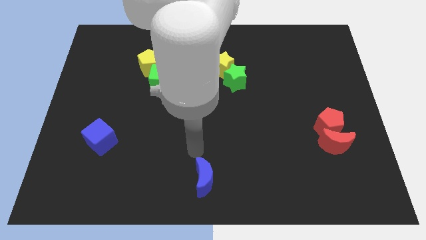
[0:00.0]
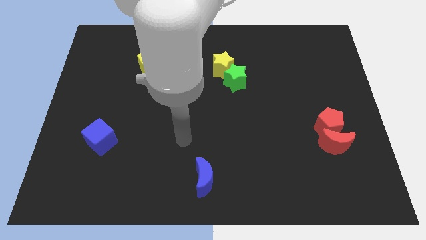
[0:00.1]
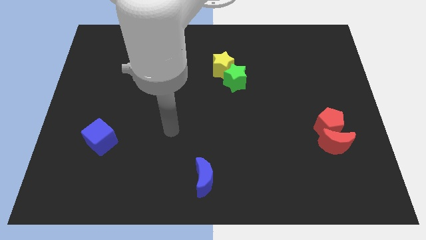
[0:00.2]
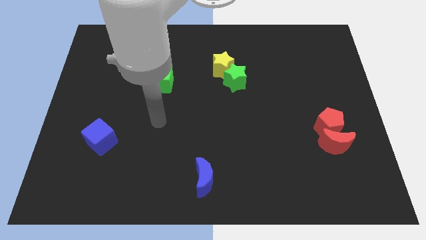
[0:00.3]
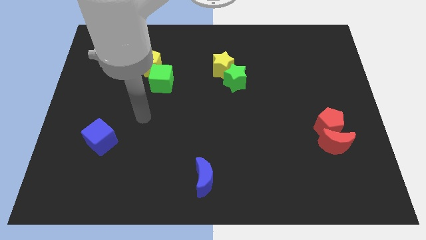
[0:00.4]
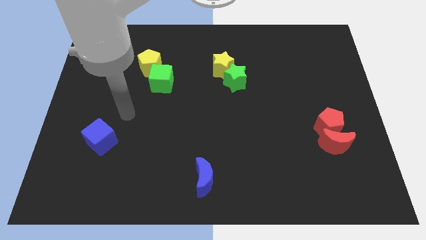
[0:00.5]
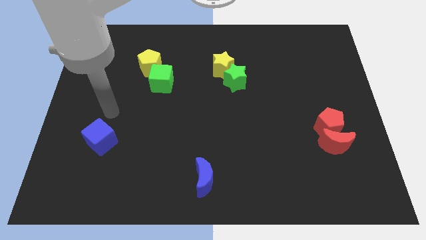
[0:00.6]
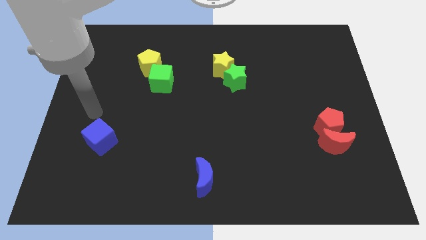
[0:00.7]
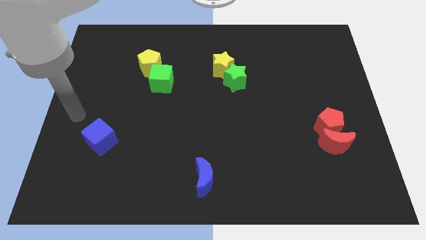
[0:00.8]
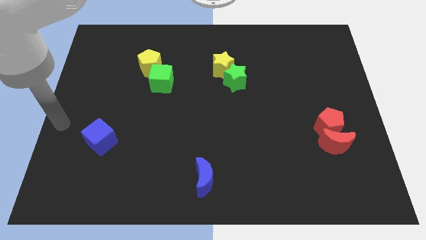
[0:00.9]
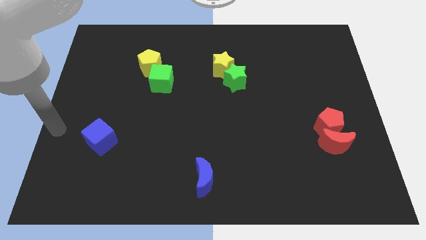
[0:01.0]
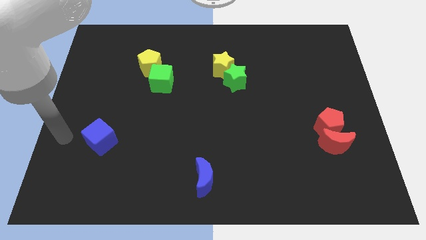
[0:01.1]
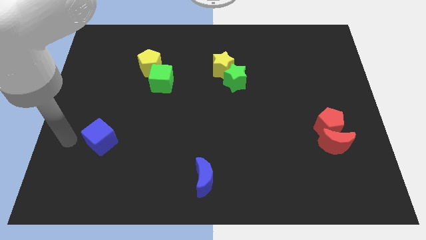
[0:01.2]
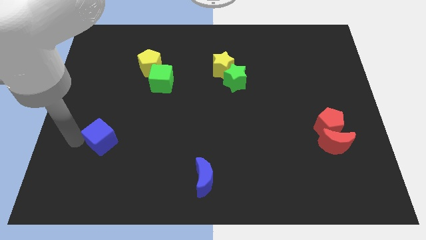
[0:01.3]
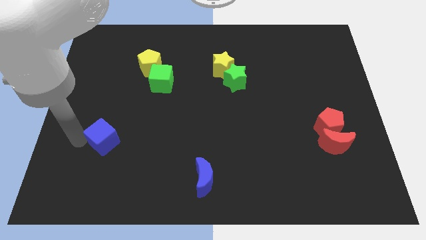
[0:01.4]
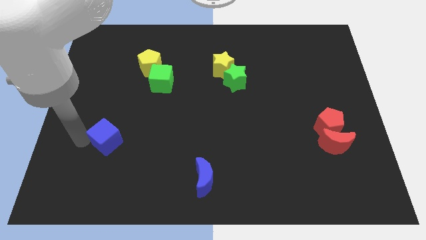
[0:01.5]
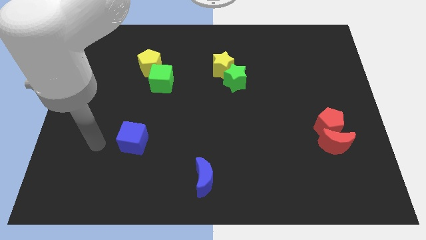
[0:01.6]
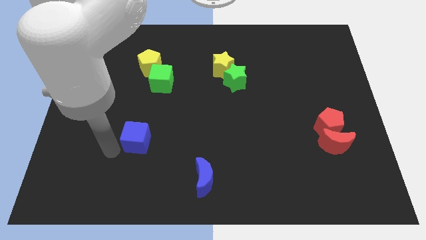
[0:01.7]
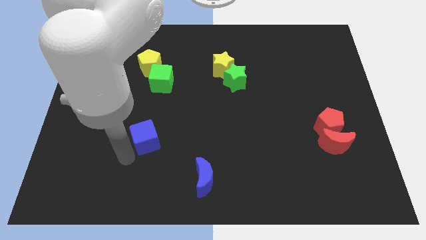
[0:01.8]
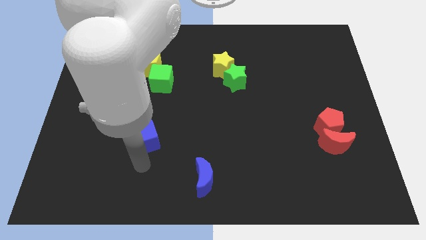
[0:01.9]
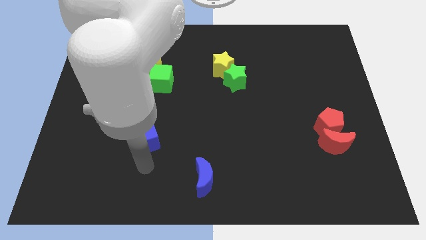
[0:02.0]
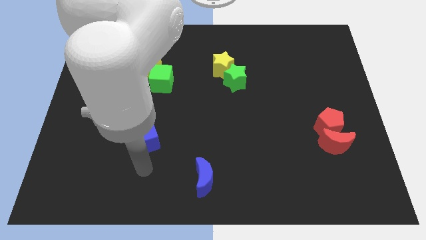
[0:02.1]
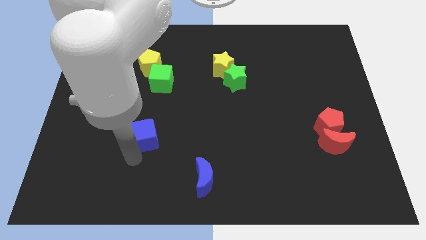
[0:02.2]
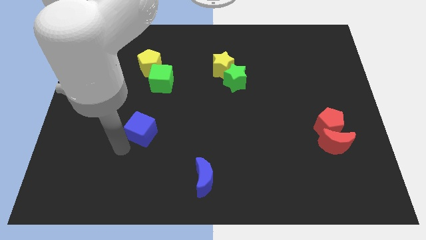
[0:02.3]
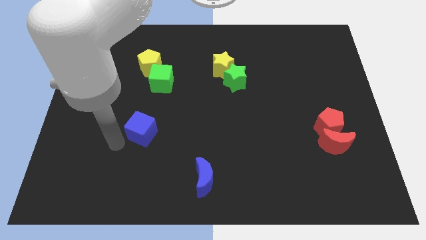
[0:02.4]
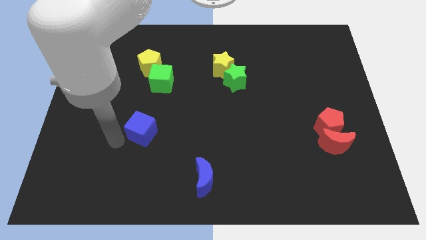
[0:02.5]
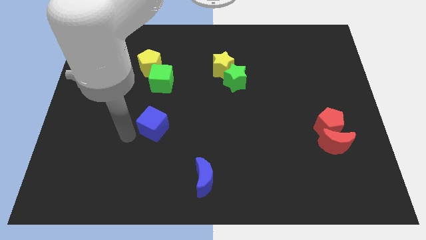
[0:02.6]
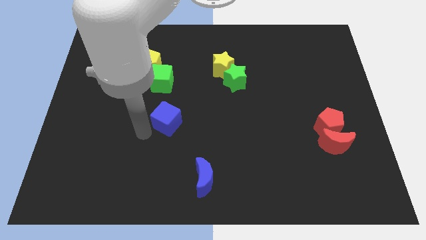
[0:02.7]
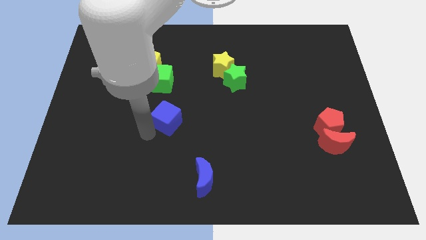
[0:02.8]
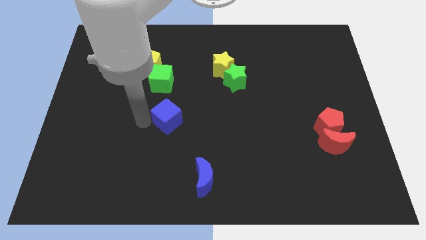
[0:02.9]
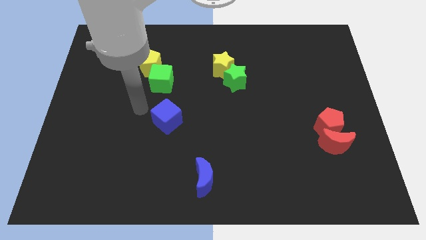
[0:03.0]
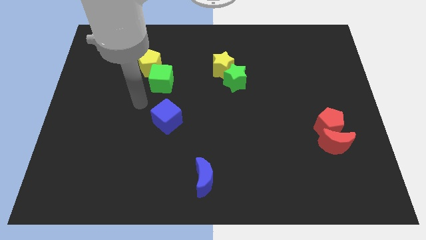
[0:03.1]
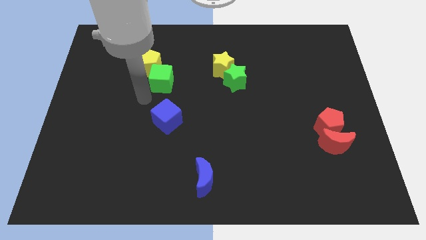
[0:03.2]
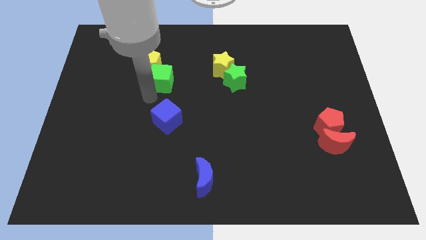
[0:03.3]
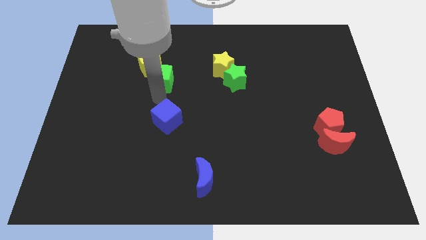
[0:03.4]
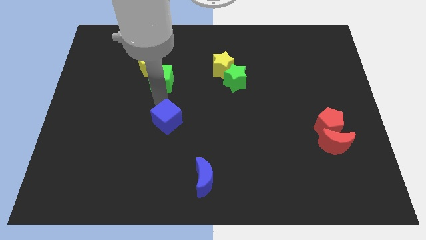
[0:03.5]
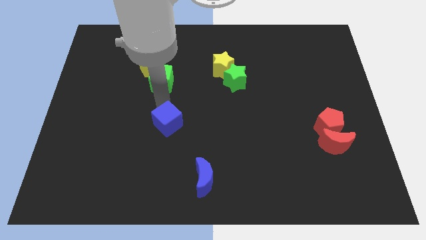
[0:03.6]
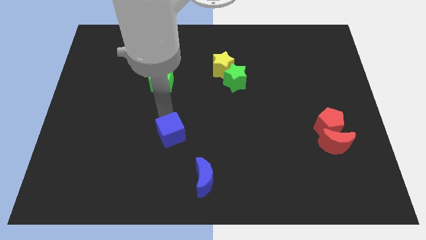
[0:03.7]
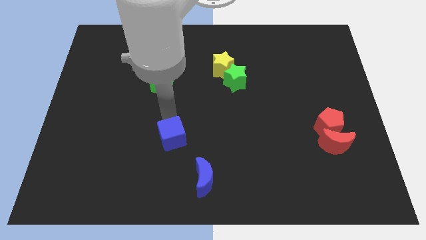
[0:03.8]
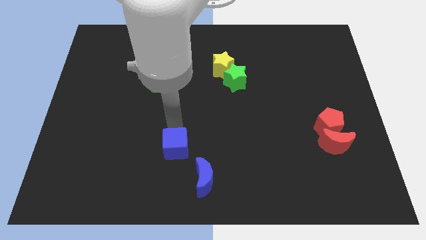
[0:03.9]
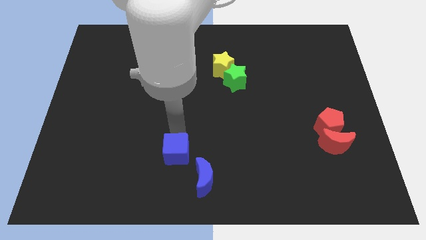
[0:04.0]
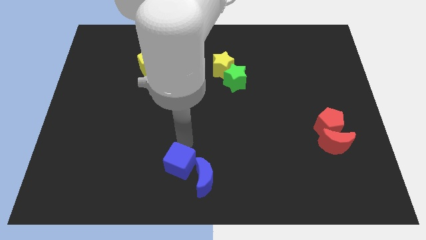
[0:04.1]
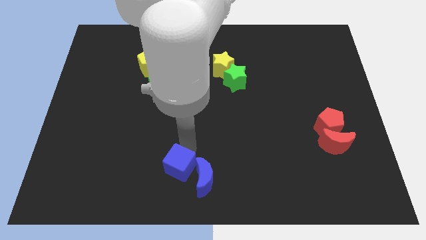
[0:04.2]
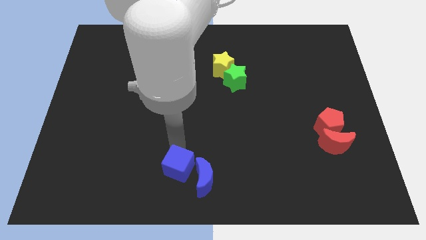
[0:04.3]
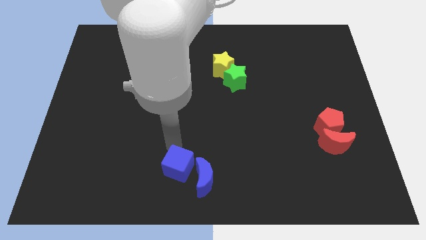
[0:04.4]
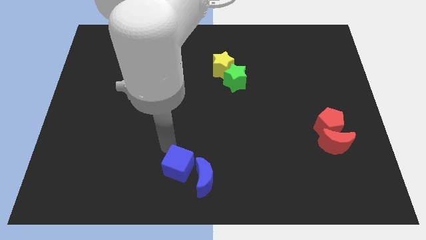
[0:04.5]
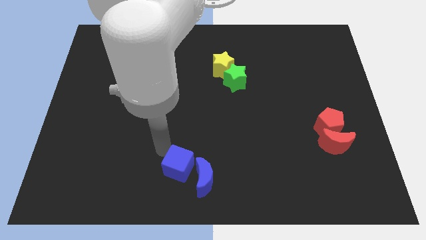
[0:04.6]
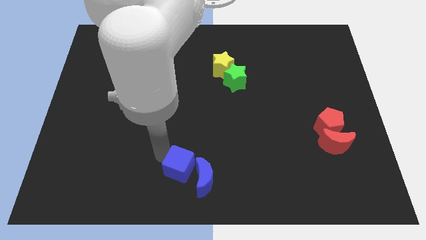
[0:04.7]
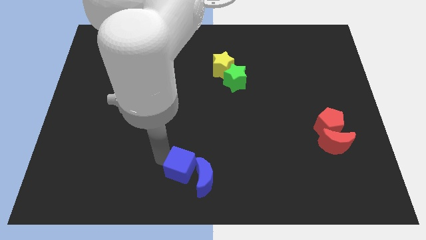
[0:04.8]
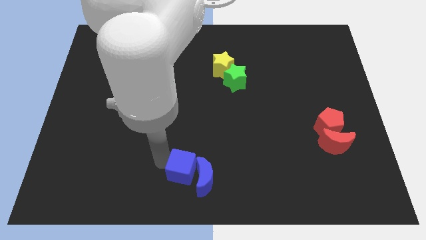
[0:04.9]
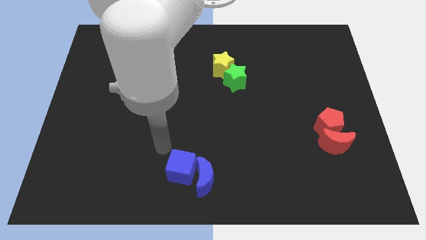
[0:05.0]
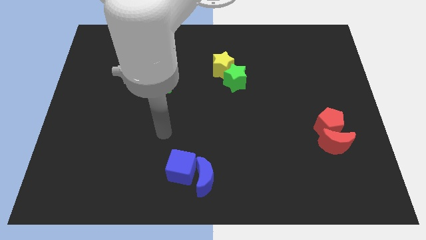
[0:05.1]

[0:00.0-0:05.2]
push the blue cube into the blue crescent

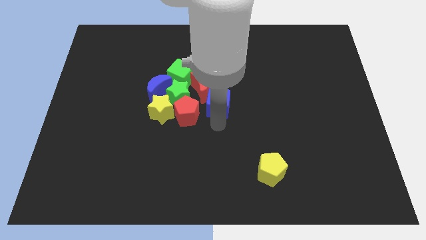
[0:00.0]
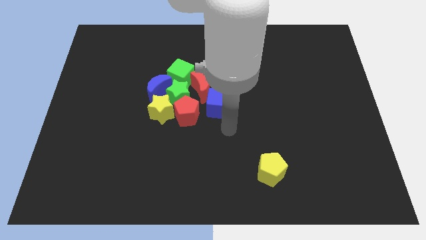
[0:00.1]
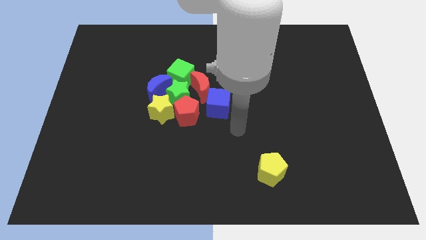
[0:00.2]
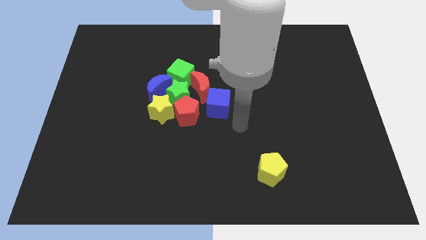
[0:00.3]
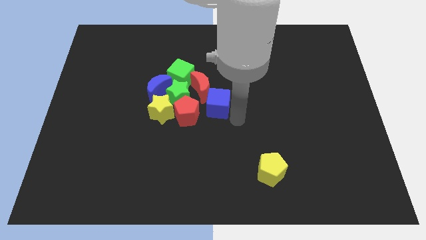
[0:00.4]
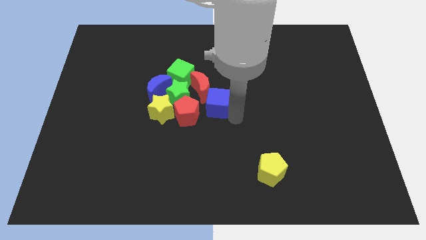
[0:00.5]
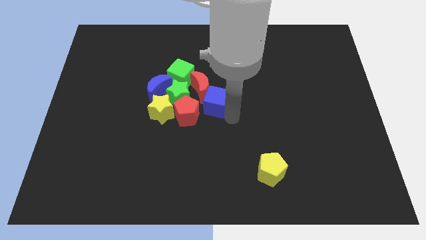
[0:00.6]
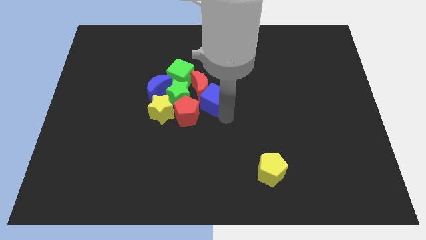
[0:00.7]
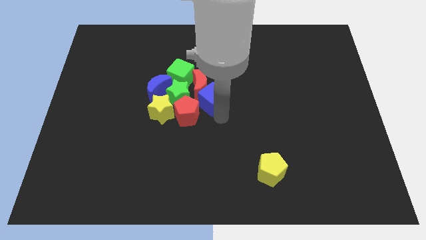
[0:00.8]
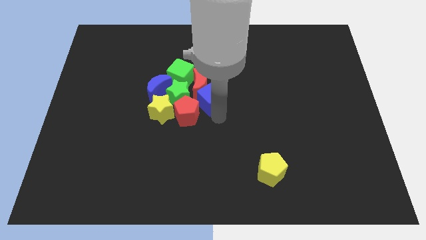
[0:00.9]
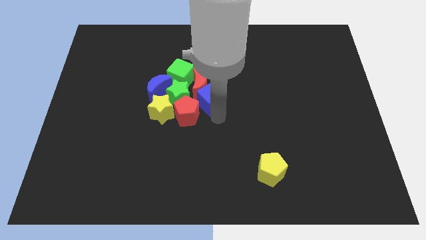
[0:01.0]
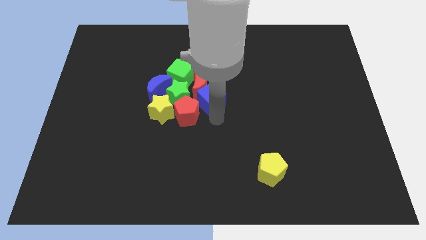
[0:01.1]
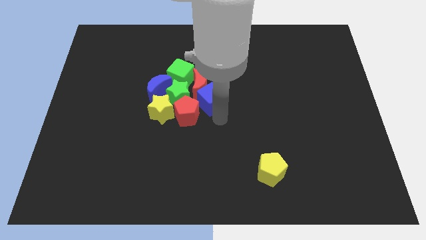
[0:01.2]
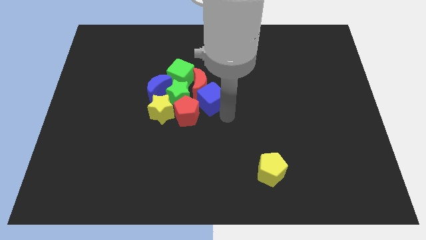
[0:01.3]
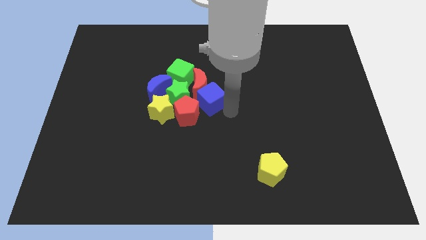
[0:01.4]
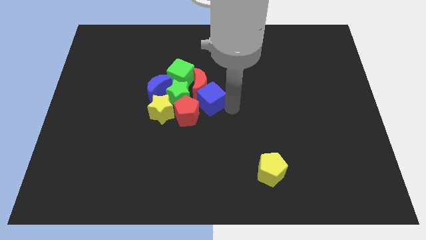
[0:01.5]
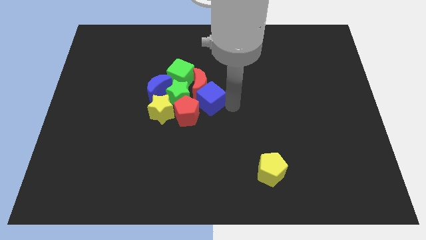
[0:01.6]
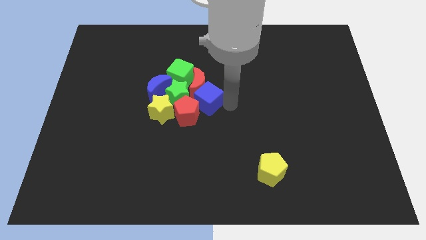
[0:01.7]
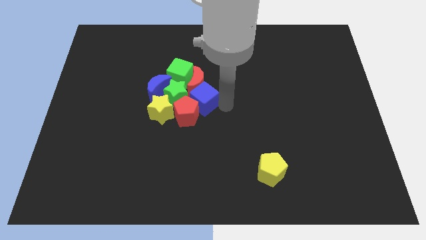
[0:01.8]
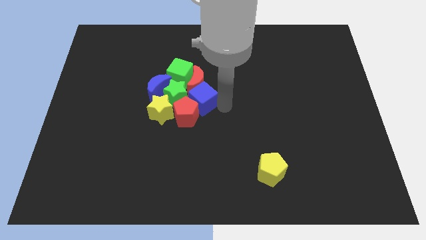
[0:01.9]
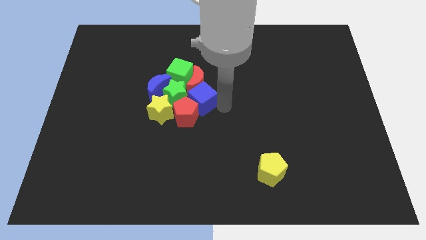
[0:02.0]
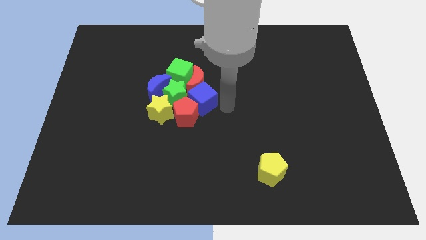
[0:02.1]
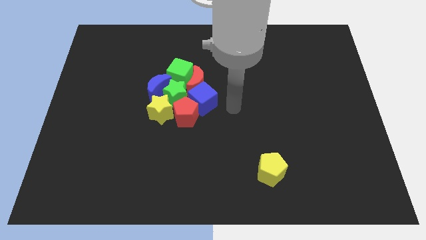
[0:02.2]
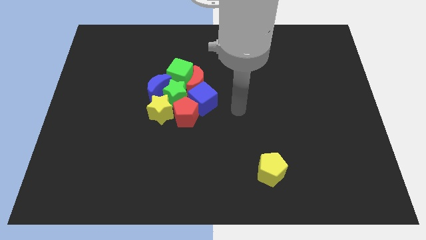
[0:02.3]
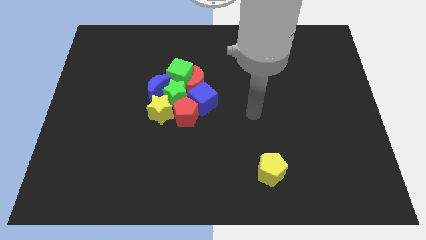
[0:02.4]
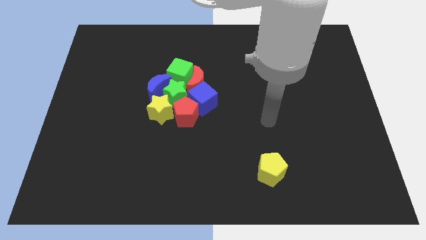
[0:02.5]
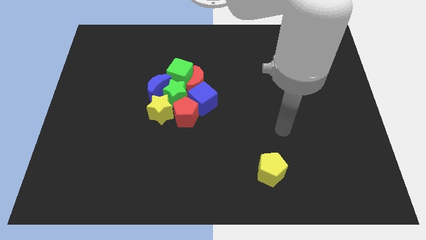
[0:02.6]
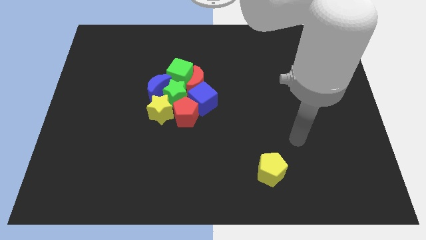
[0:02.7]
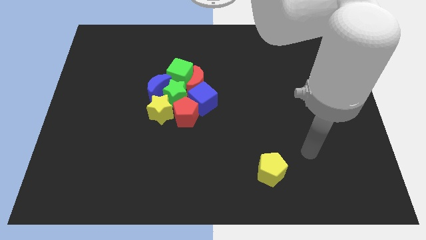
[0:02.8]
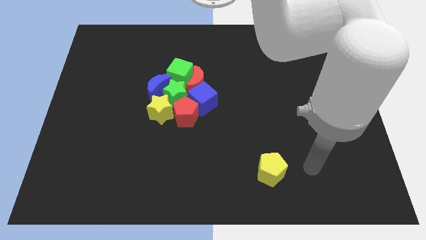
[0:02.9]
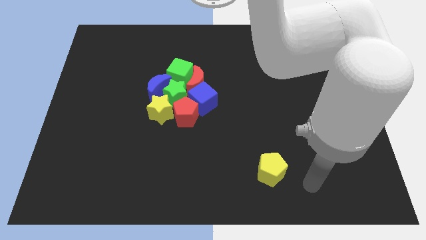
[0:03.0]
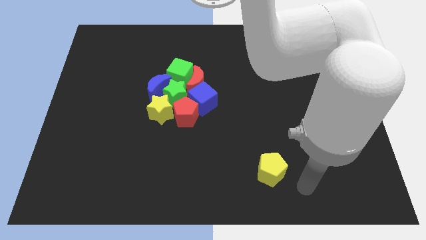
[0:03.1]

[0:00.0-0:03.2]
push the blue cube into the red blocks

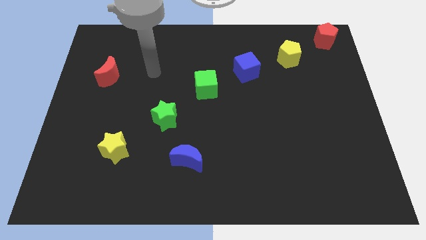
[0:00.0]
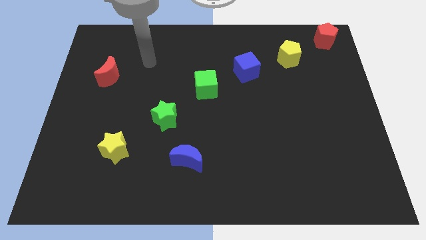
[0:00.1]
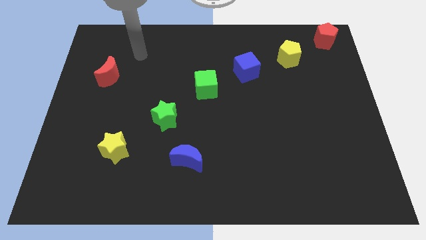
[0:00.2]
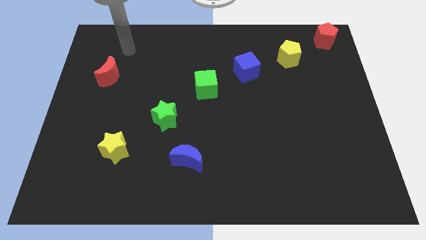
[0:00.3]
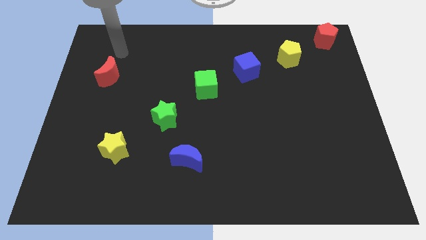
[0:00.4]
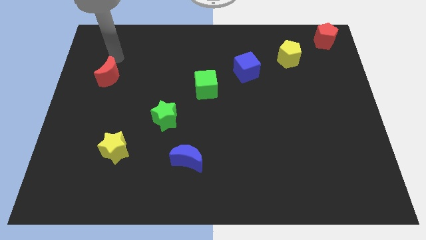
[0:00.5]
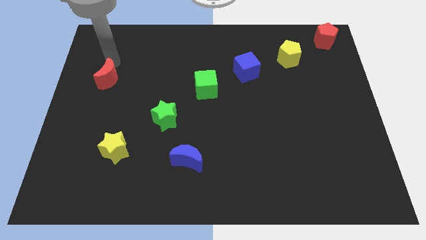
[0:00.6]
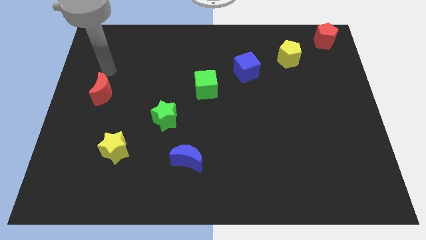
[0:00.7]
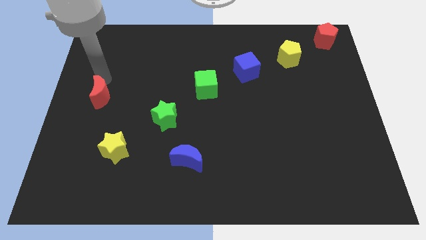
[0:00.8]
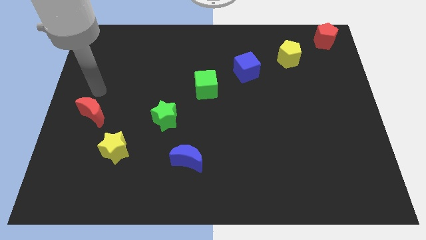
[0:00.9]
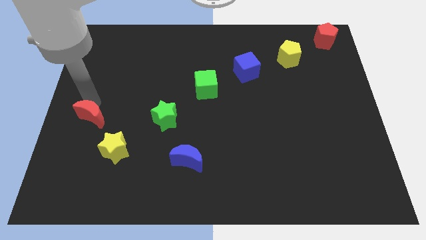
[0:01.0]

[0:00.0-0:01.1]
push red crescent towards the bottom of the board
